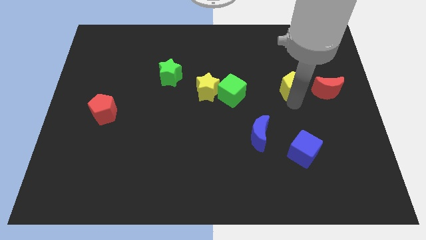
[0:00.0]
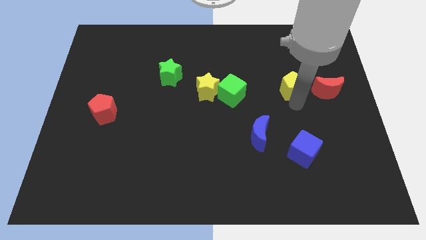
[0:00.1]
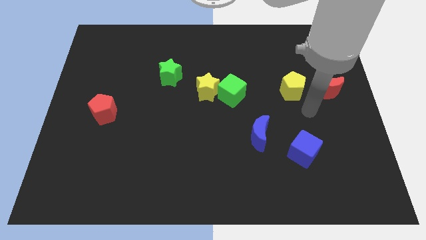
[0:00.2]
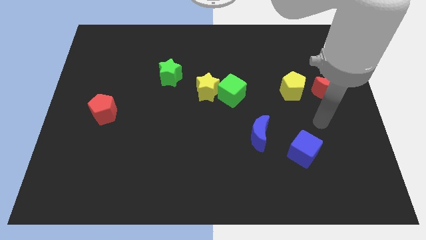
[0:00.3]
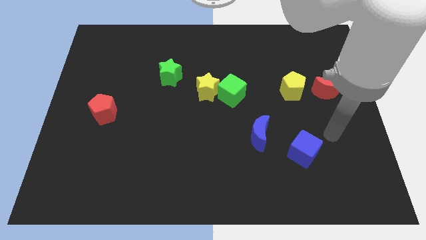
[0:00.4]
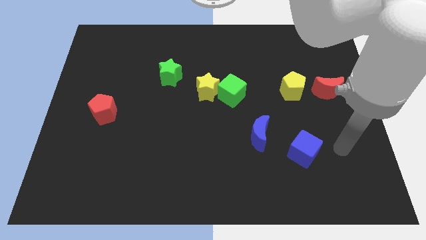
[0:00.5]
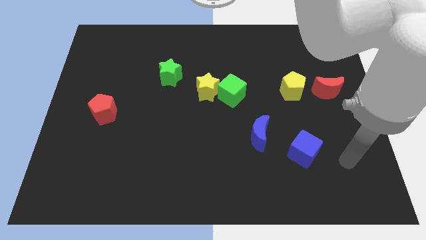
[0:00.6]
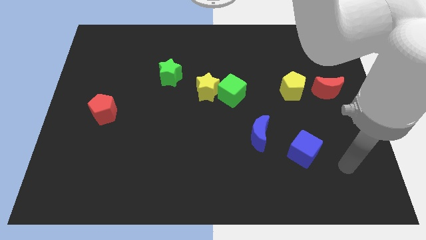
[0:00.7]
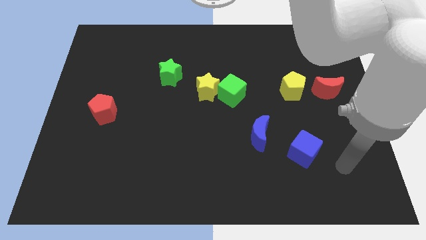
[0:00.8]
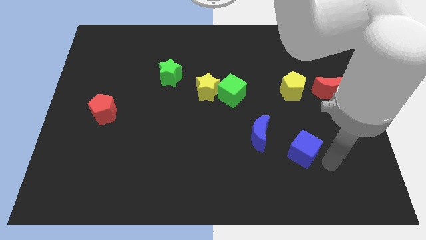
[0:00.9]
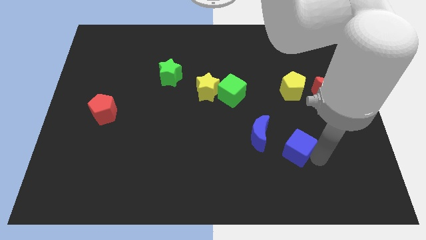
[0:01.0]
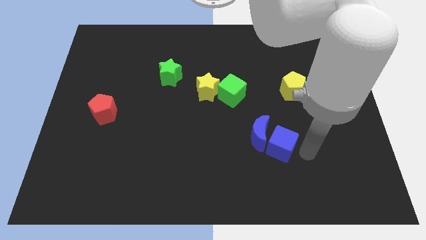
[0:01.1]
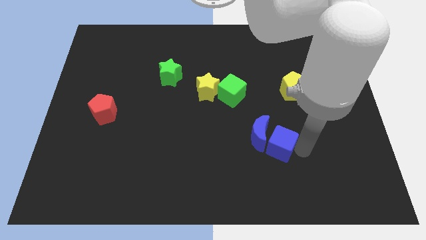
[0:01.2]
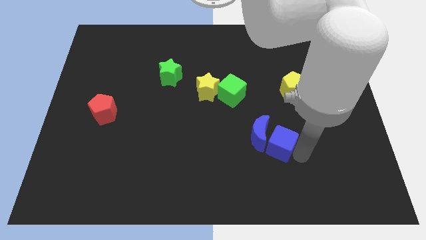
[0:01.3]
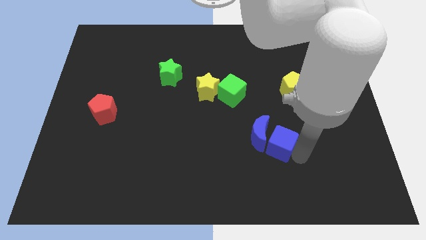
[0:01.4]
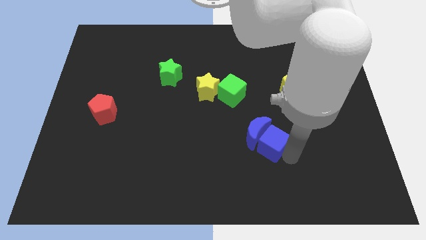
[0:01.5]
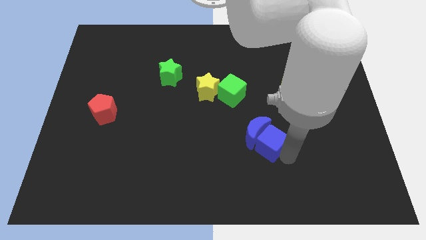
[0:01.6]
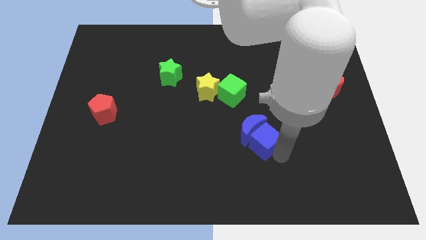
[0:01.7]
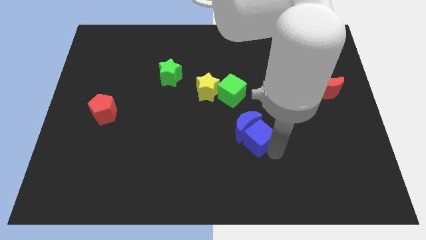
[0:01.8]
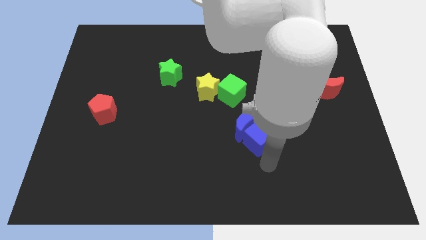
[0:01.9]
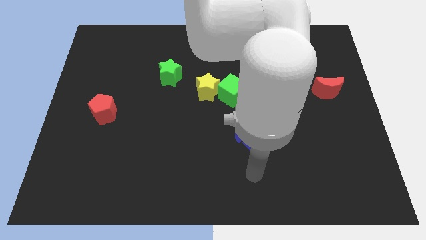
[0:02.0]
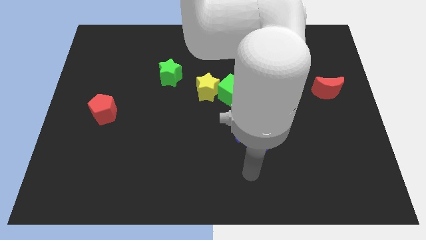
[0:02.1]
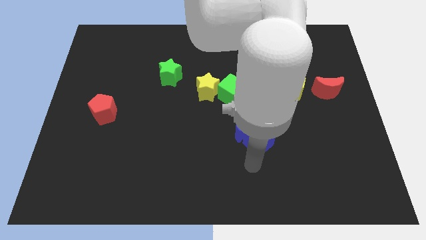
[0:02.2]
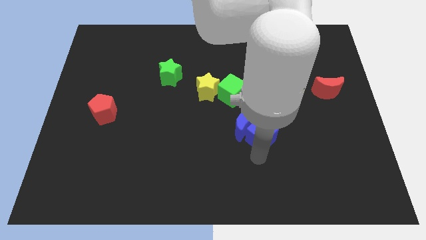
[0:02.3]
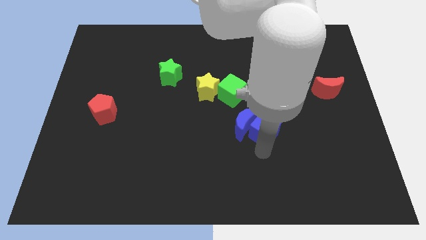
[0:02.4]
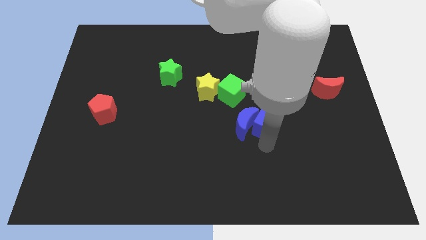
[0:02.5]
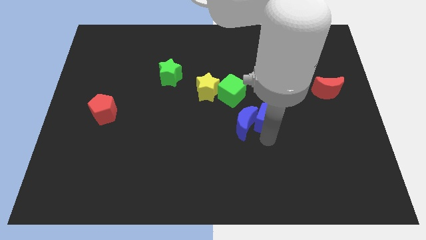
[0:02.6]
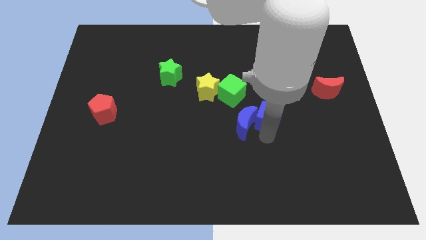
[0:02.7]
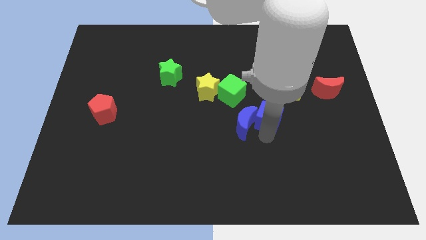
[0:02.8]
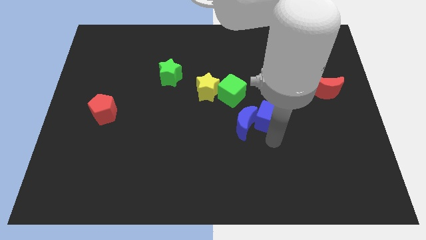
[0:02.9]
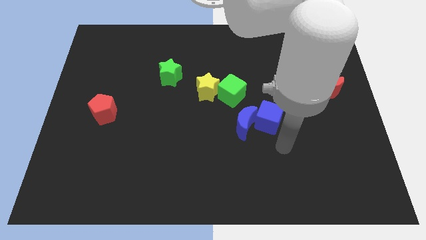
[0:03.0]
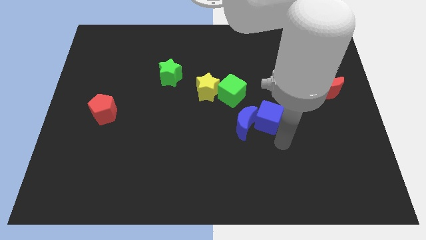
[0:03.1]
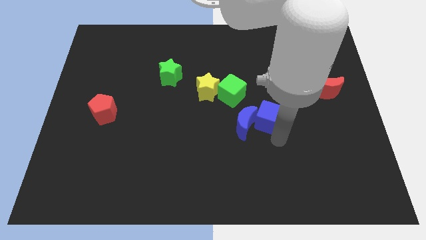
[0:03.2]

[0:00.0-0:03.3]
push the blue blocks to the bottom right of the green cube

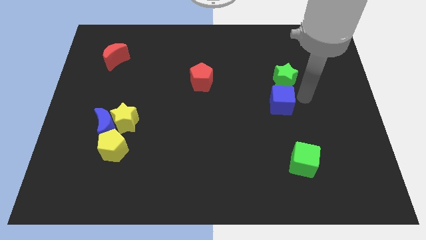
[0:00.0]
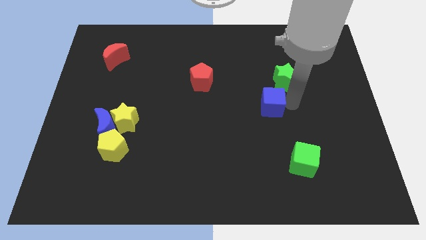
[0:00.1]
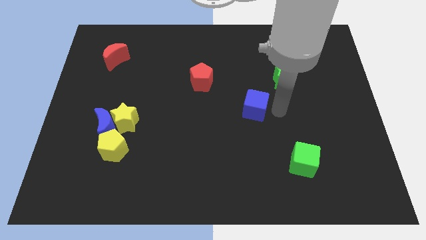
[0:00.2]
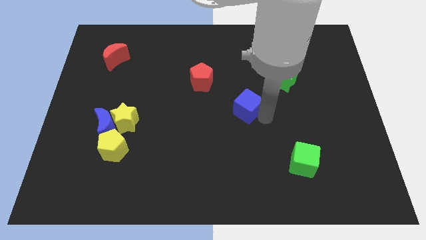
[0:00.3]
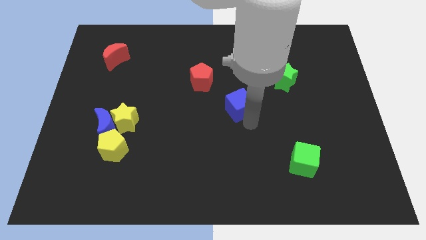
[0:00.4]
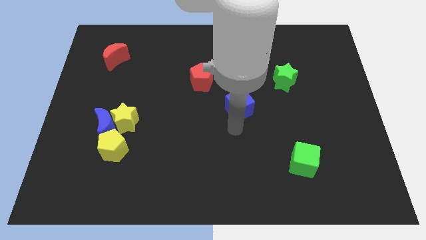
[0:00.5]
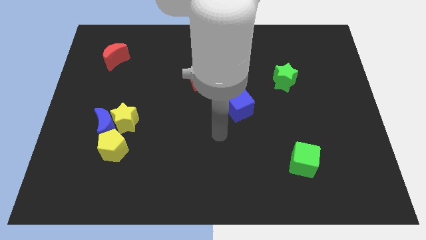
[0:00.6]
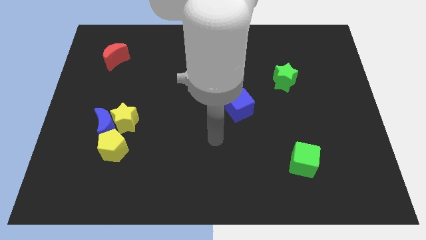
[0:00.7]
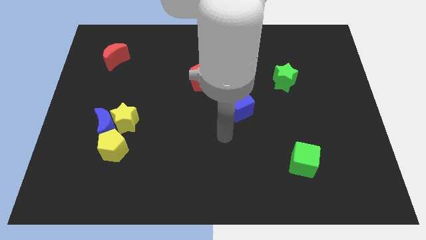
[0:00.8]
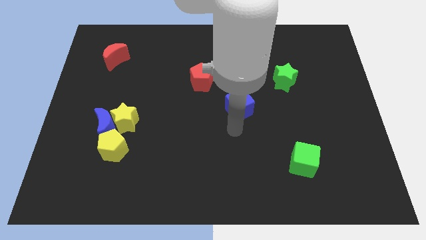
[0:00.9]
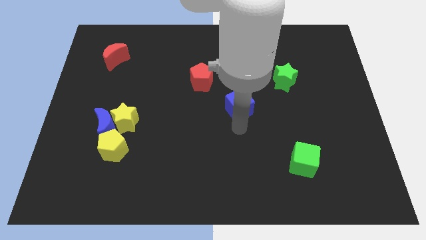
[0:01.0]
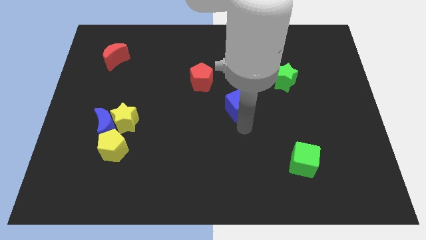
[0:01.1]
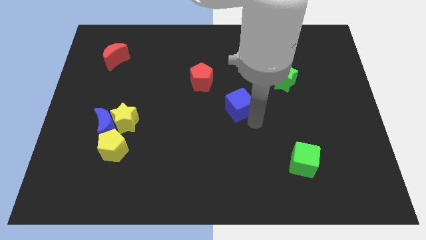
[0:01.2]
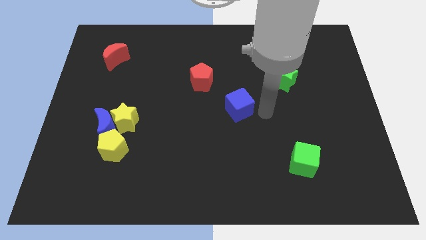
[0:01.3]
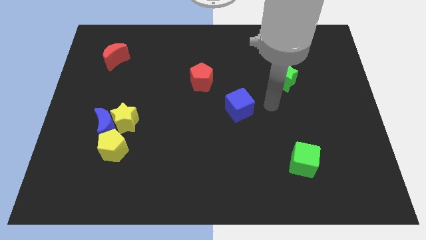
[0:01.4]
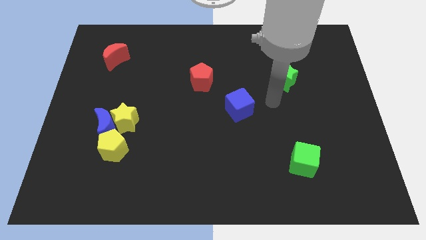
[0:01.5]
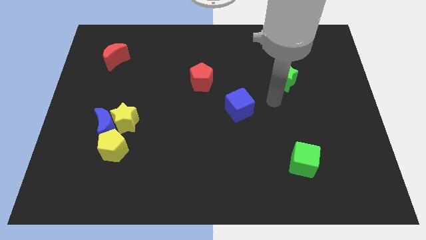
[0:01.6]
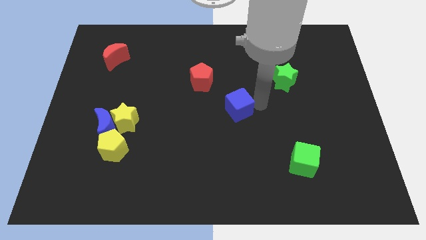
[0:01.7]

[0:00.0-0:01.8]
place blue cube to the center of the board

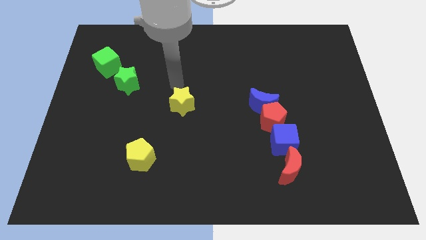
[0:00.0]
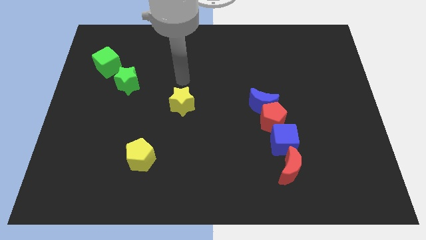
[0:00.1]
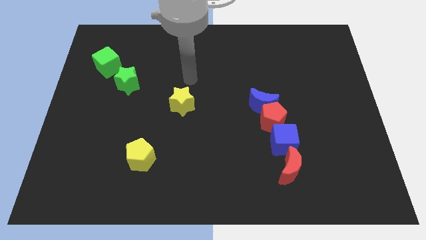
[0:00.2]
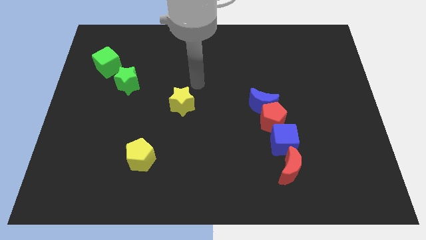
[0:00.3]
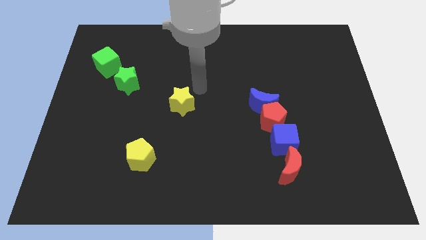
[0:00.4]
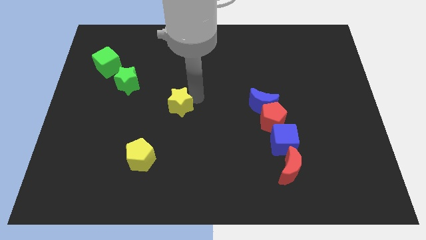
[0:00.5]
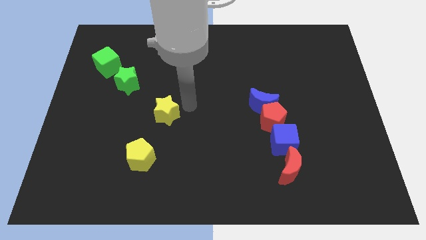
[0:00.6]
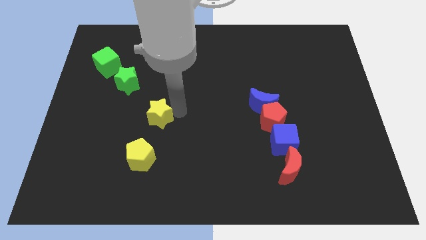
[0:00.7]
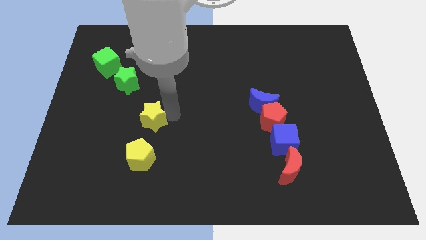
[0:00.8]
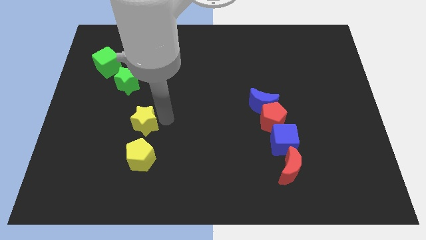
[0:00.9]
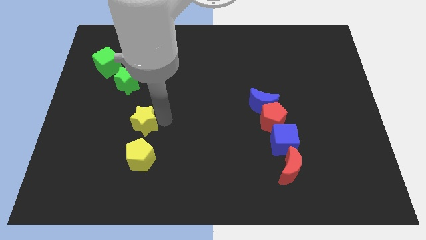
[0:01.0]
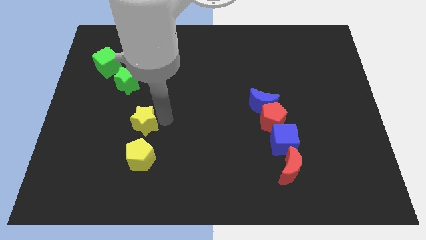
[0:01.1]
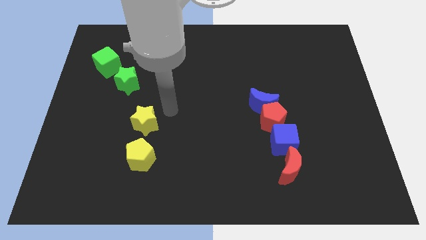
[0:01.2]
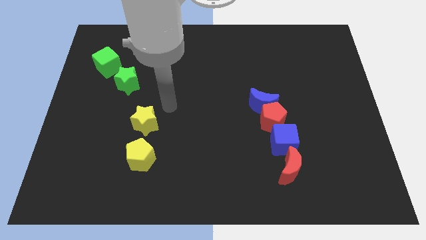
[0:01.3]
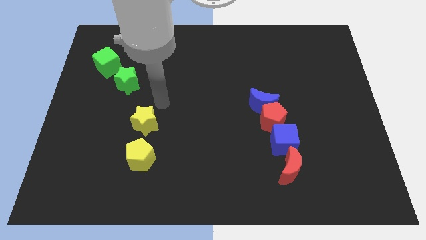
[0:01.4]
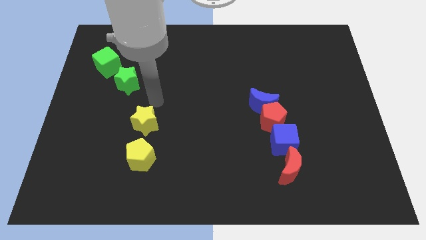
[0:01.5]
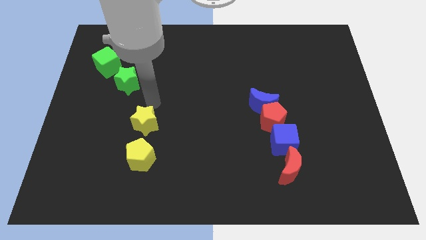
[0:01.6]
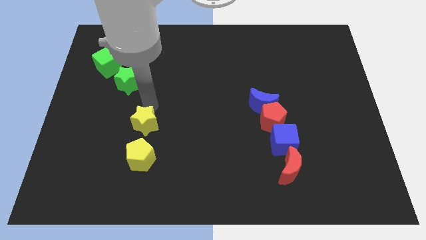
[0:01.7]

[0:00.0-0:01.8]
slide the yellow star to the top side of the yellow pentagon

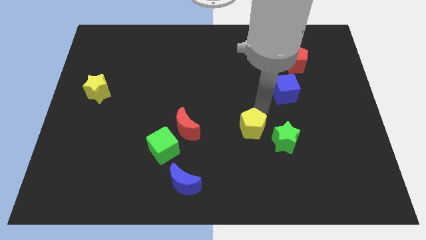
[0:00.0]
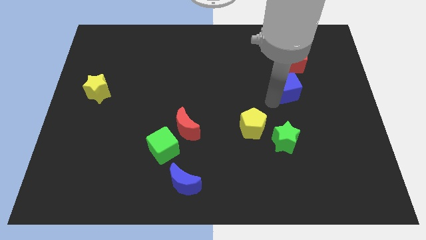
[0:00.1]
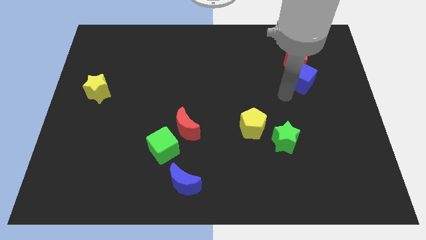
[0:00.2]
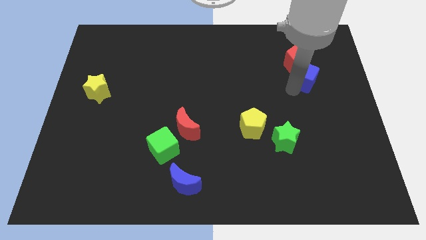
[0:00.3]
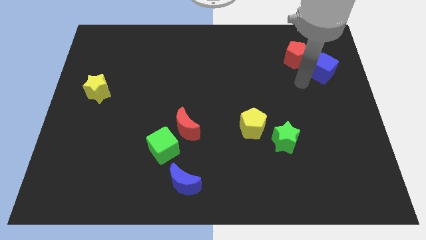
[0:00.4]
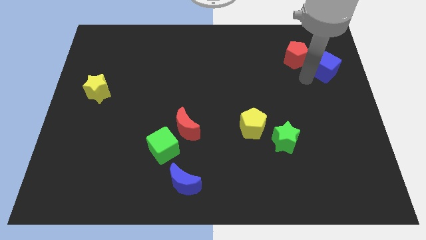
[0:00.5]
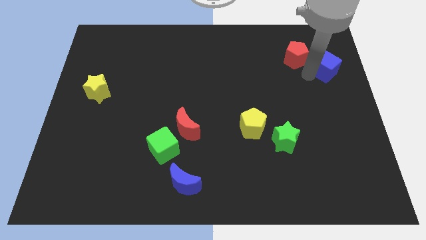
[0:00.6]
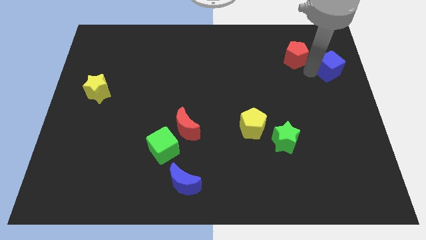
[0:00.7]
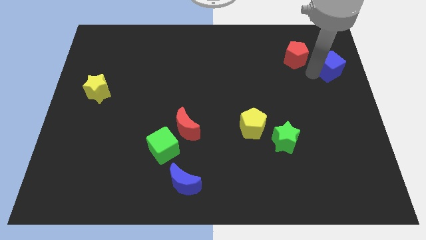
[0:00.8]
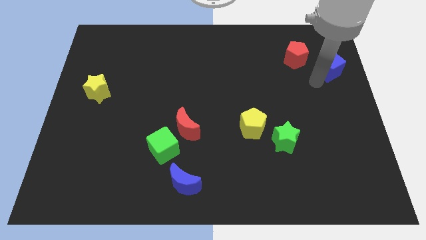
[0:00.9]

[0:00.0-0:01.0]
put the blue cube at the bottom right side of the red pentagon

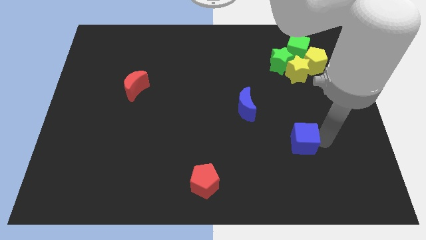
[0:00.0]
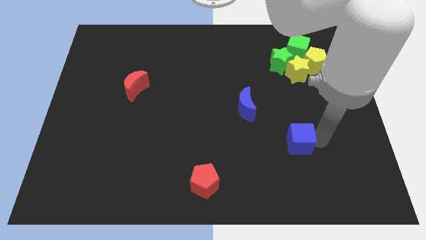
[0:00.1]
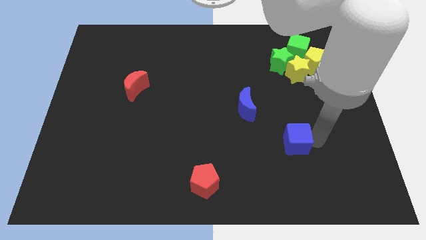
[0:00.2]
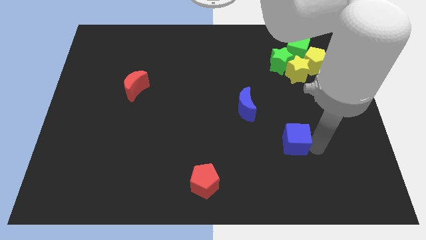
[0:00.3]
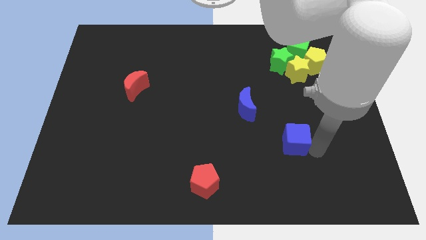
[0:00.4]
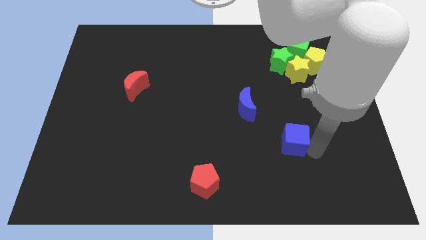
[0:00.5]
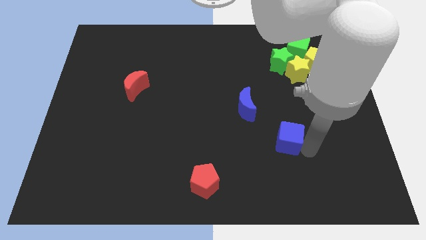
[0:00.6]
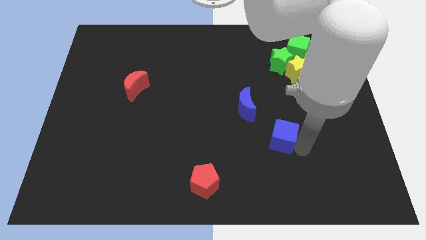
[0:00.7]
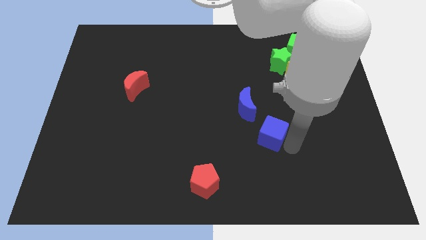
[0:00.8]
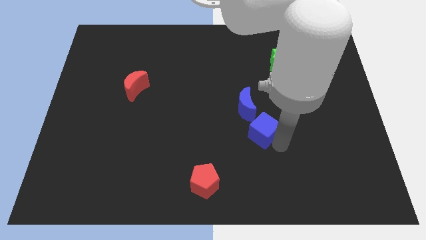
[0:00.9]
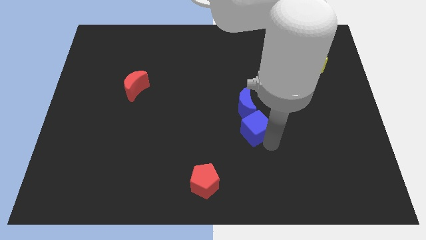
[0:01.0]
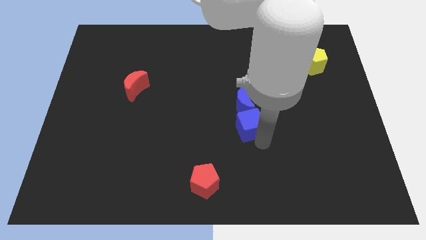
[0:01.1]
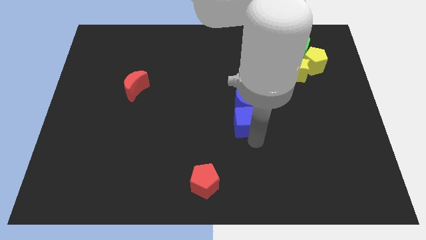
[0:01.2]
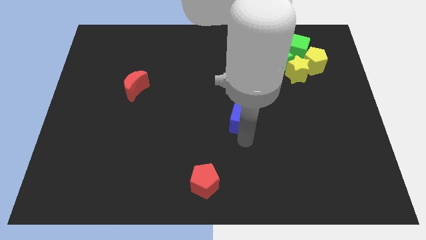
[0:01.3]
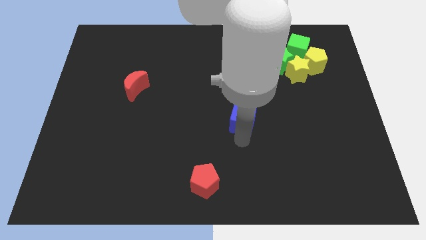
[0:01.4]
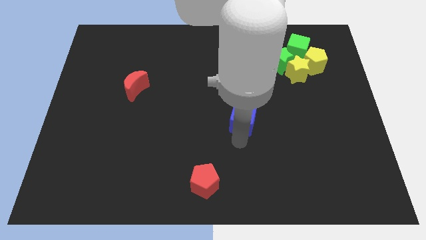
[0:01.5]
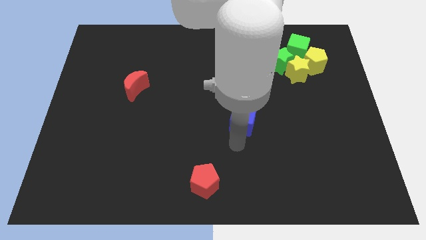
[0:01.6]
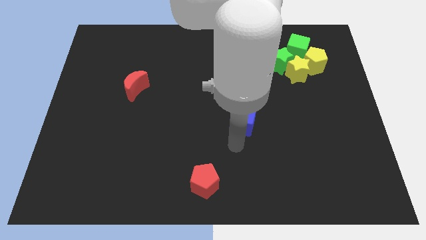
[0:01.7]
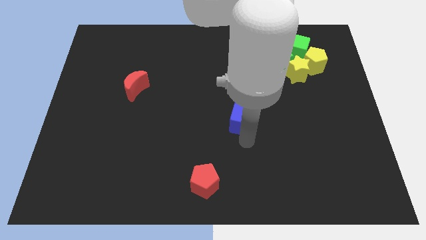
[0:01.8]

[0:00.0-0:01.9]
push the blue cube into the blue crescent
